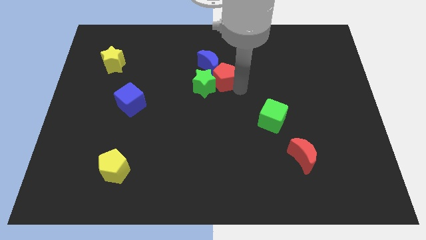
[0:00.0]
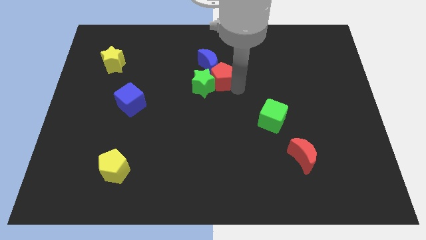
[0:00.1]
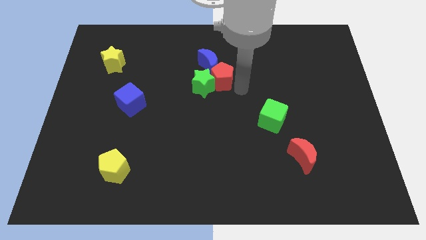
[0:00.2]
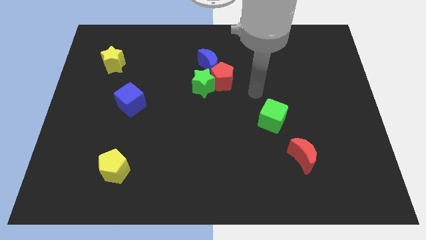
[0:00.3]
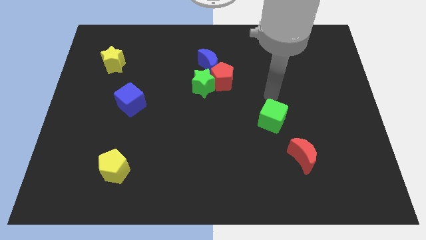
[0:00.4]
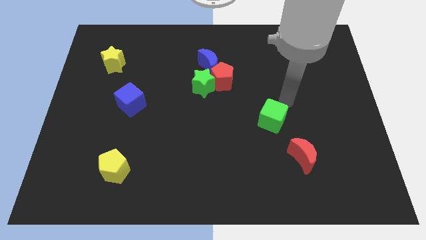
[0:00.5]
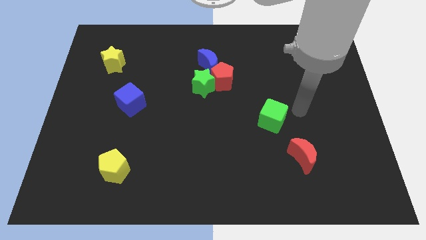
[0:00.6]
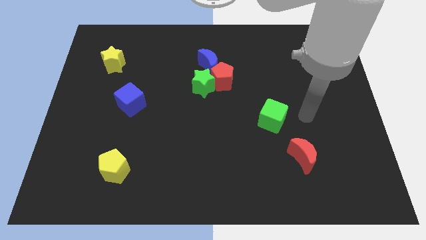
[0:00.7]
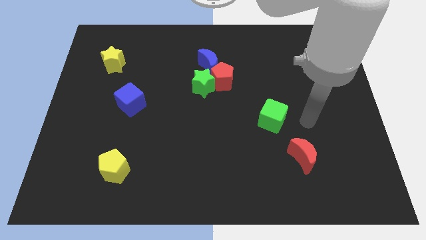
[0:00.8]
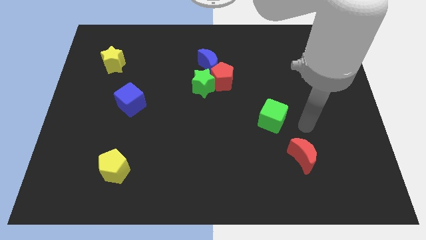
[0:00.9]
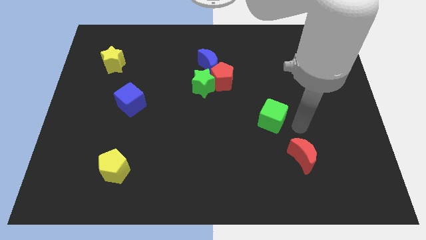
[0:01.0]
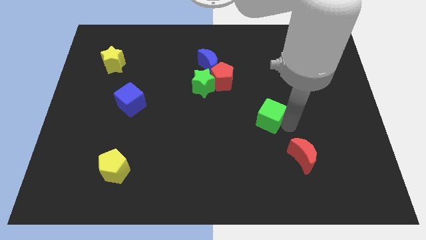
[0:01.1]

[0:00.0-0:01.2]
place your arm at the right side of the green cube

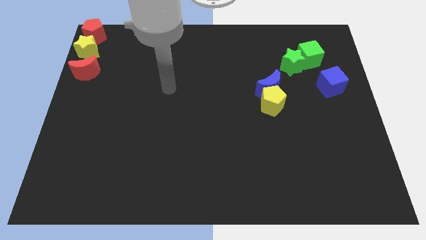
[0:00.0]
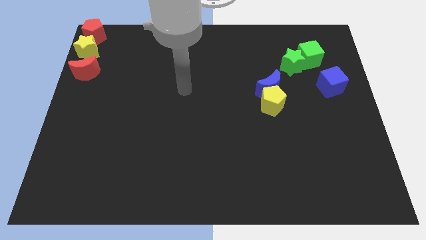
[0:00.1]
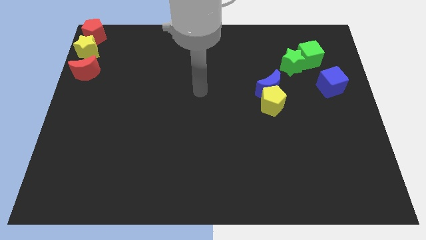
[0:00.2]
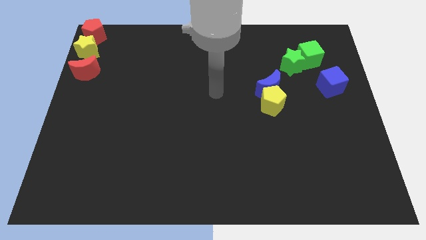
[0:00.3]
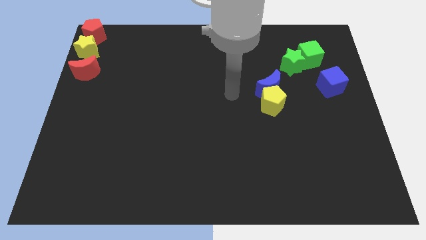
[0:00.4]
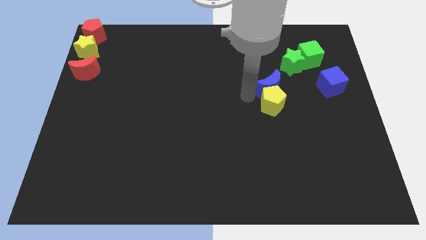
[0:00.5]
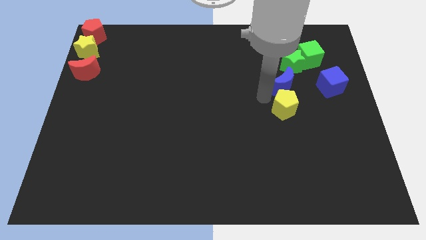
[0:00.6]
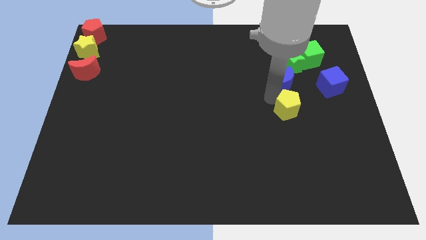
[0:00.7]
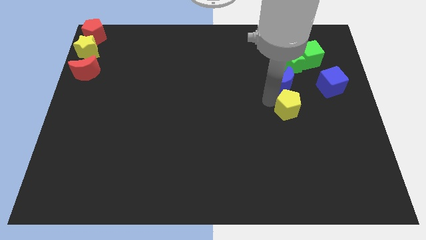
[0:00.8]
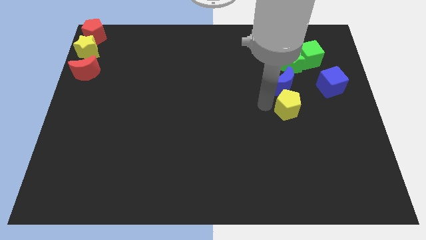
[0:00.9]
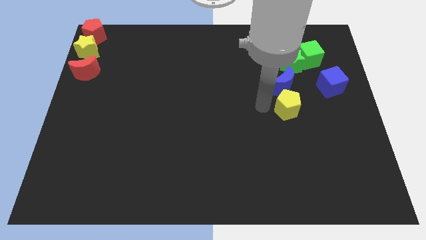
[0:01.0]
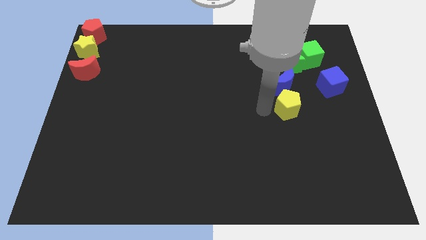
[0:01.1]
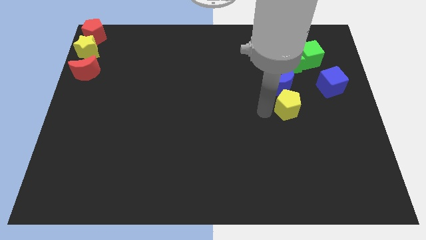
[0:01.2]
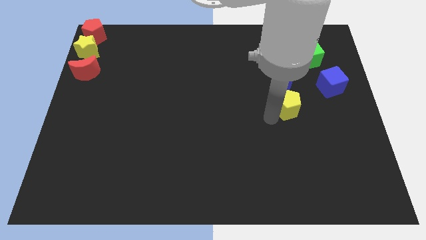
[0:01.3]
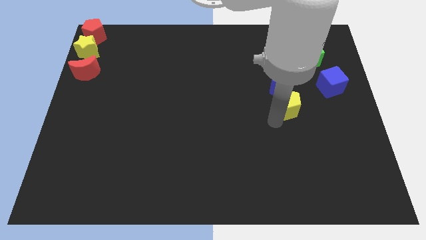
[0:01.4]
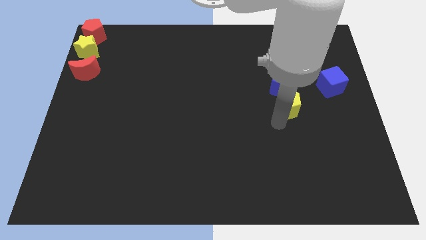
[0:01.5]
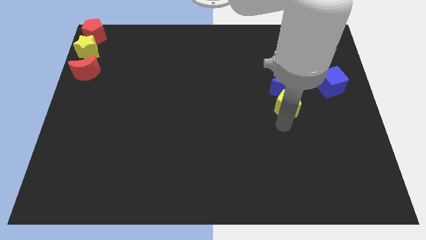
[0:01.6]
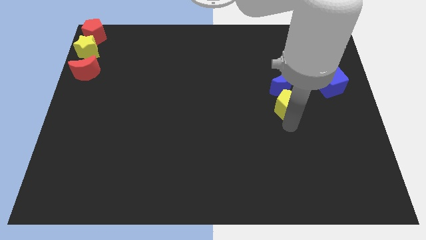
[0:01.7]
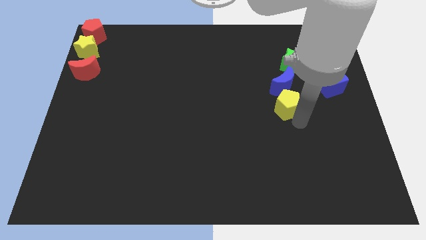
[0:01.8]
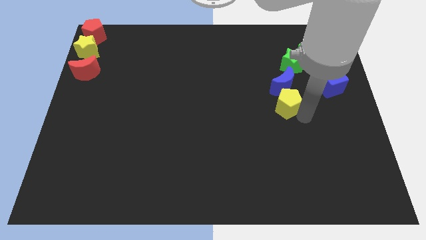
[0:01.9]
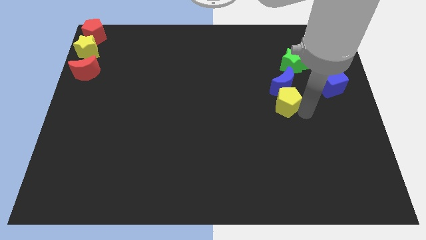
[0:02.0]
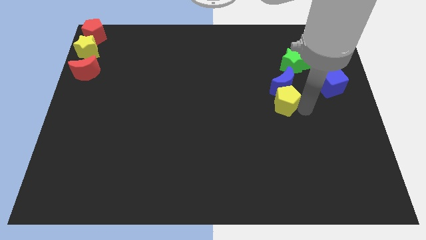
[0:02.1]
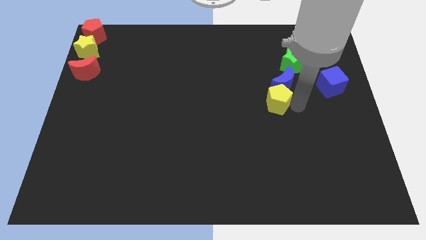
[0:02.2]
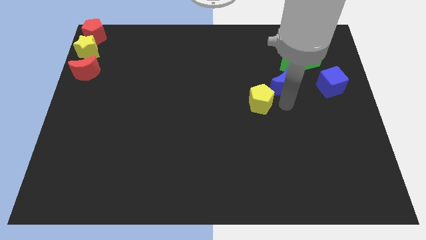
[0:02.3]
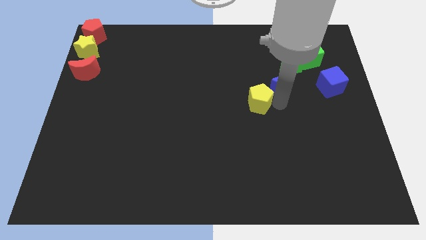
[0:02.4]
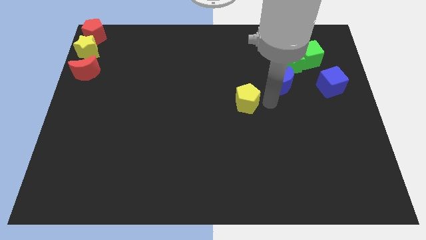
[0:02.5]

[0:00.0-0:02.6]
separate the yellow pentagon and the blue moon

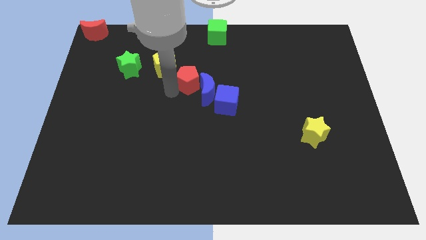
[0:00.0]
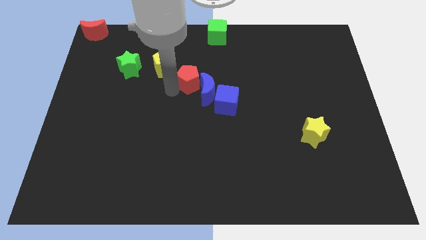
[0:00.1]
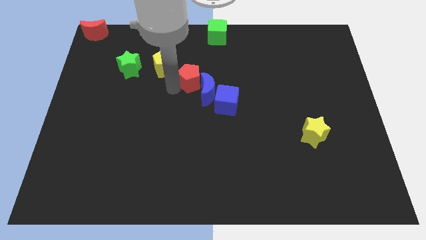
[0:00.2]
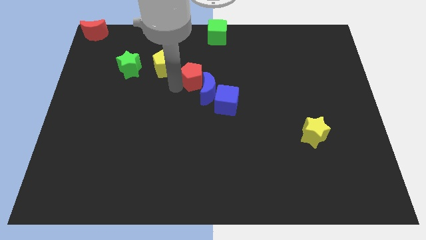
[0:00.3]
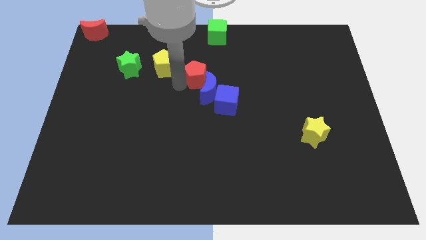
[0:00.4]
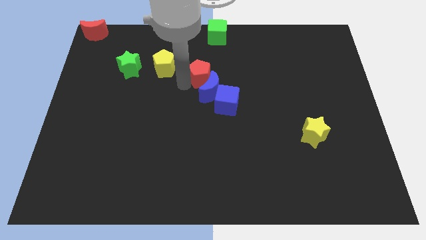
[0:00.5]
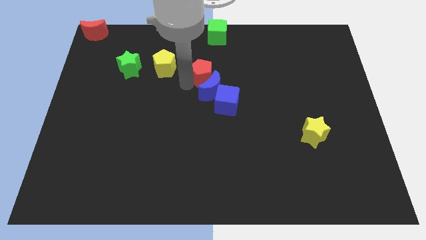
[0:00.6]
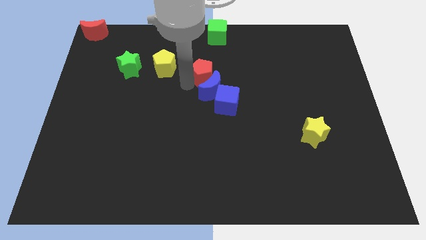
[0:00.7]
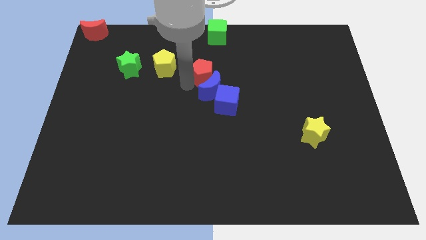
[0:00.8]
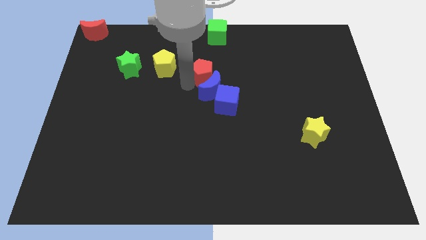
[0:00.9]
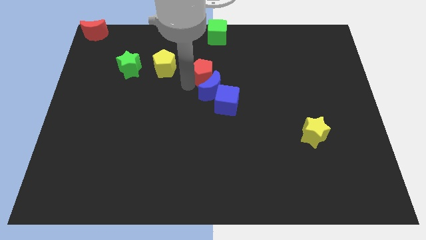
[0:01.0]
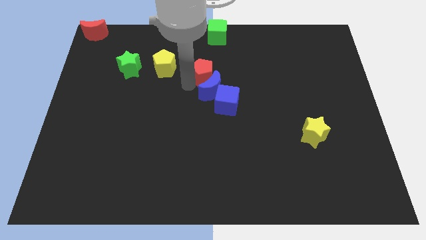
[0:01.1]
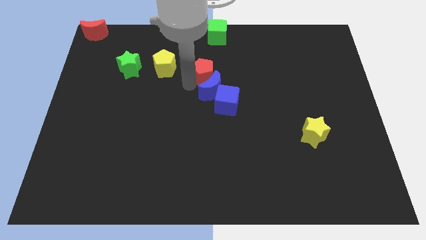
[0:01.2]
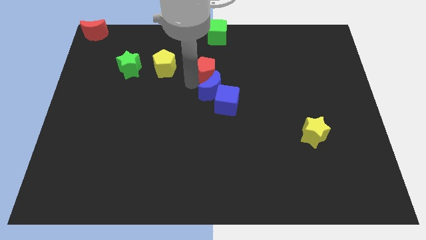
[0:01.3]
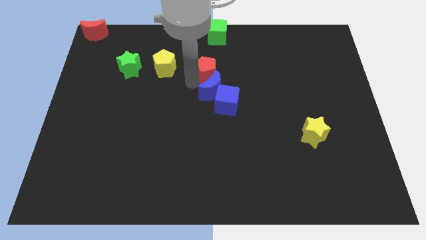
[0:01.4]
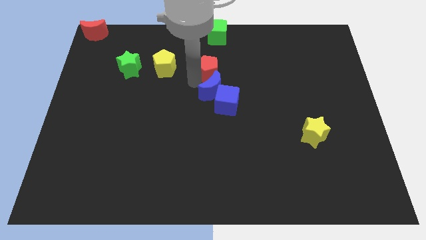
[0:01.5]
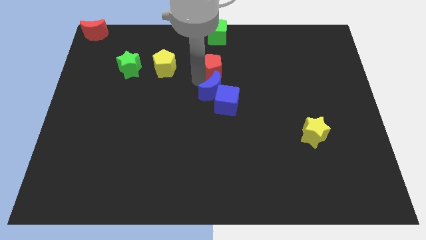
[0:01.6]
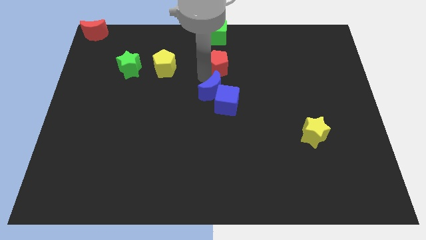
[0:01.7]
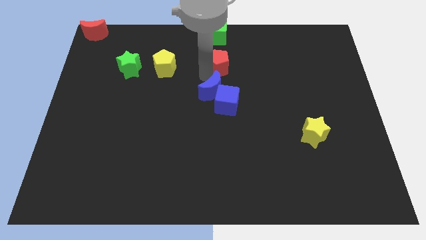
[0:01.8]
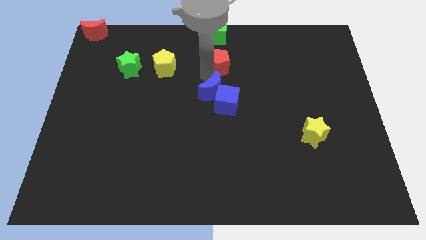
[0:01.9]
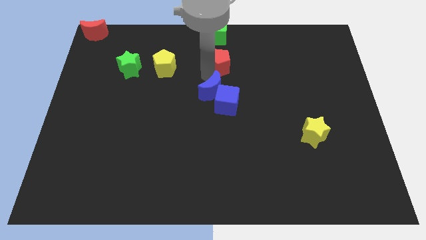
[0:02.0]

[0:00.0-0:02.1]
push red pentagon below green cube

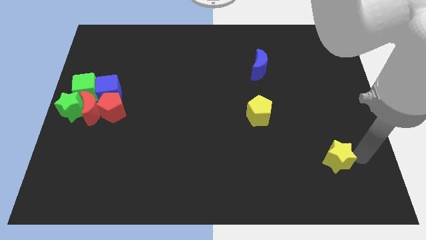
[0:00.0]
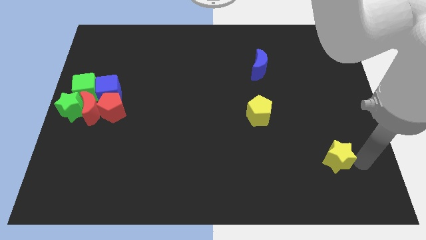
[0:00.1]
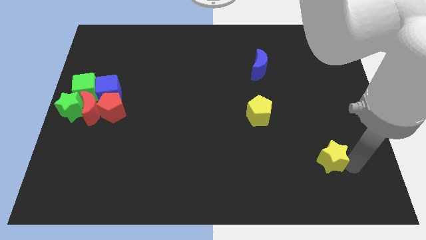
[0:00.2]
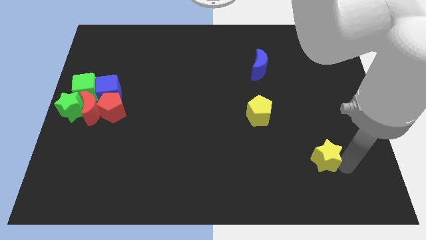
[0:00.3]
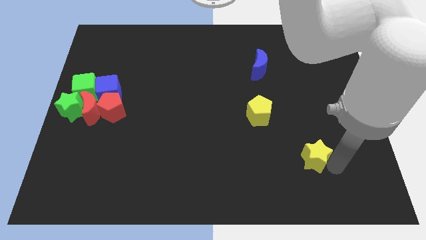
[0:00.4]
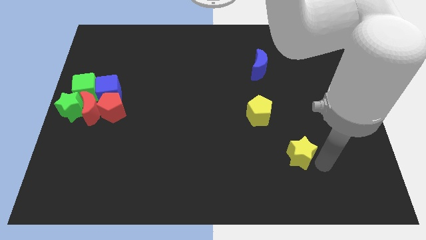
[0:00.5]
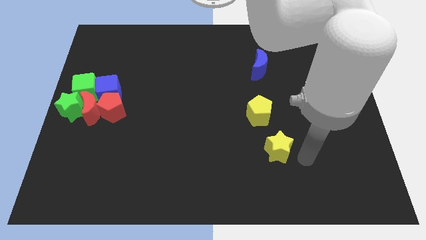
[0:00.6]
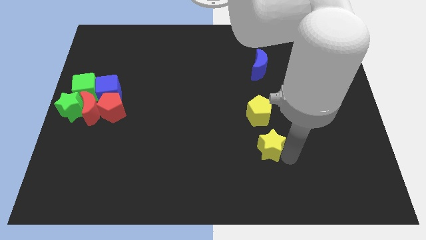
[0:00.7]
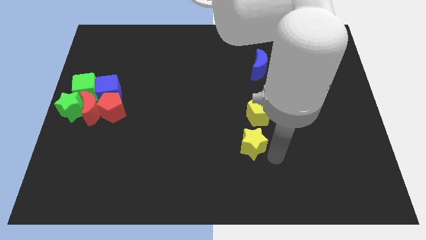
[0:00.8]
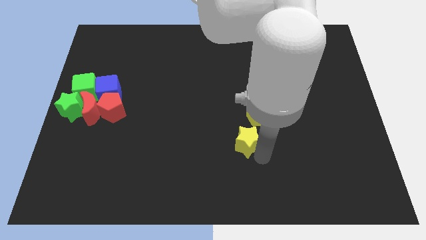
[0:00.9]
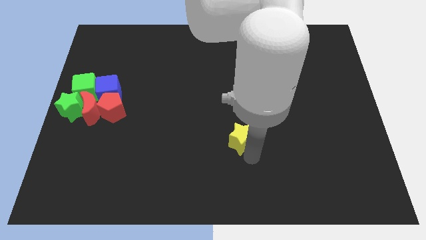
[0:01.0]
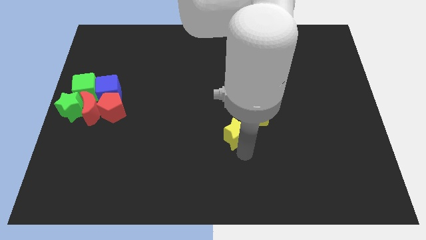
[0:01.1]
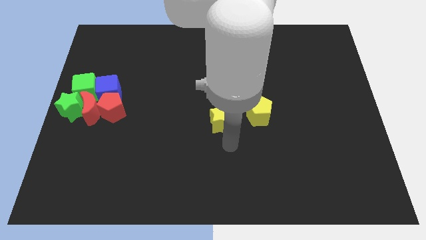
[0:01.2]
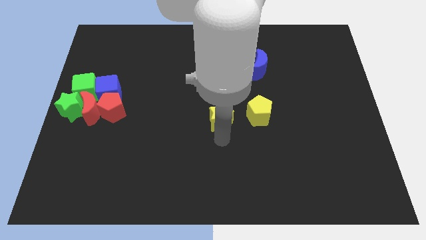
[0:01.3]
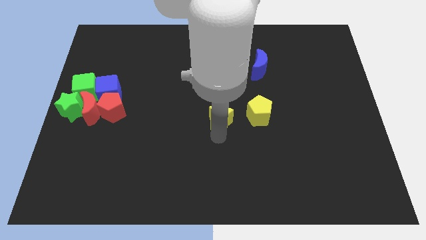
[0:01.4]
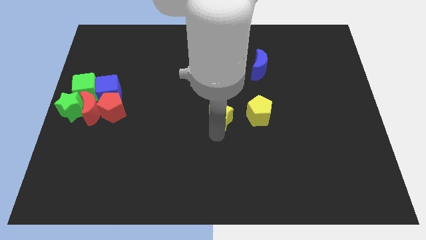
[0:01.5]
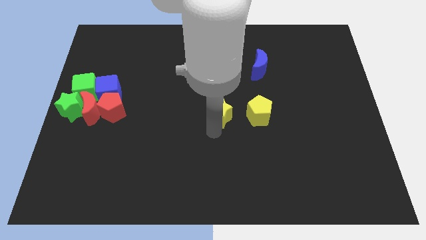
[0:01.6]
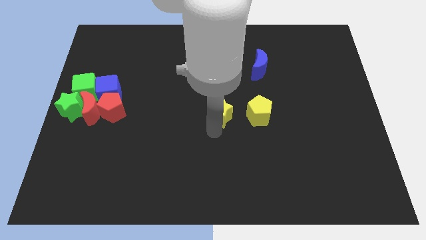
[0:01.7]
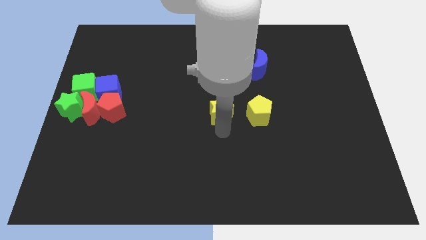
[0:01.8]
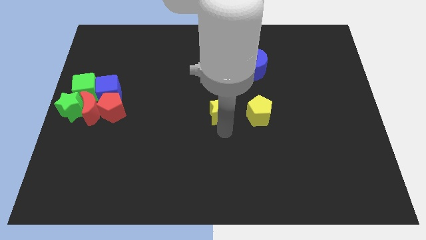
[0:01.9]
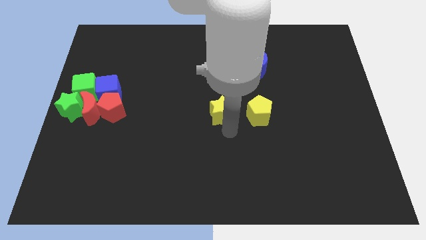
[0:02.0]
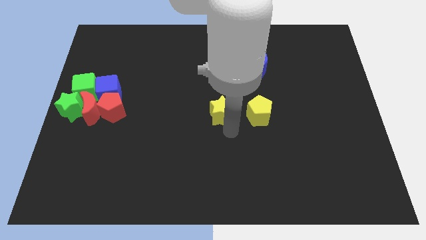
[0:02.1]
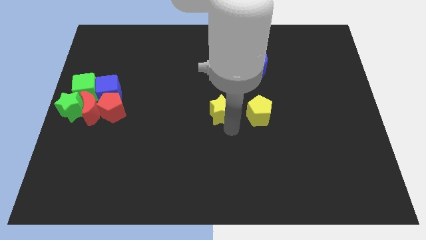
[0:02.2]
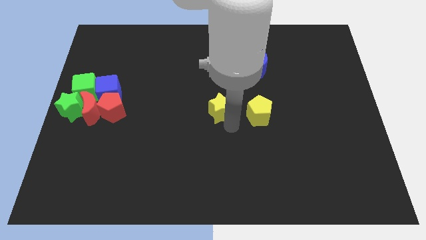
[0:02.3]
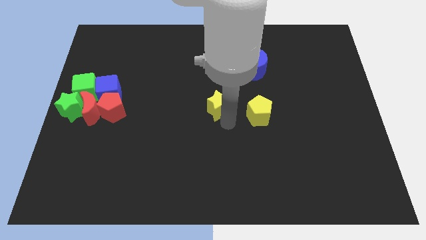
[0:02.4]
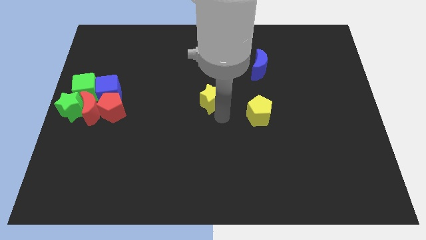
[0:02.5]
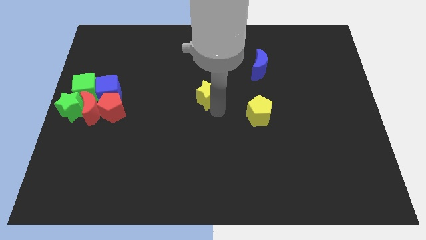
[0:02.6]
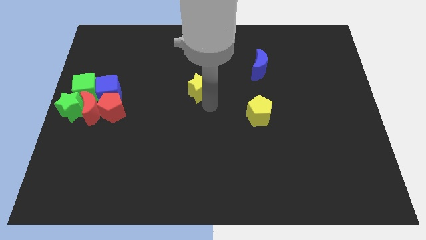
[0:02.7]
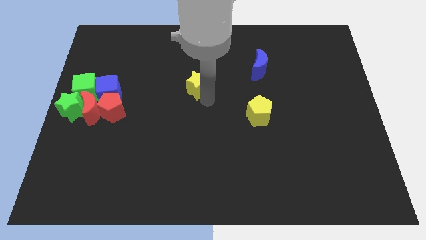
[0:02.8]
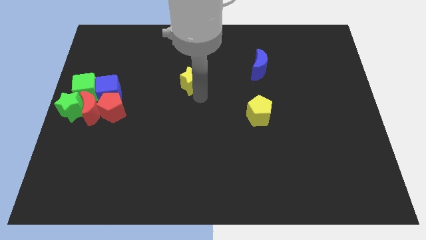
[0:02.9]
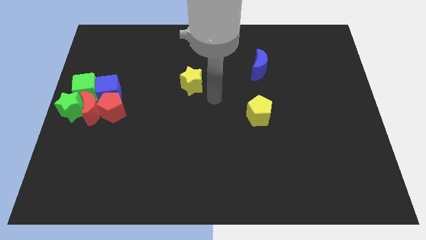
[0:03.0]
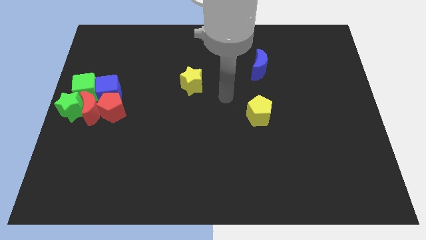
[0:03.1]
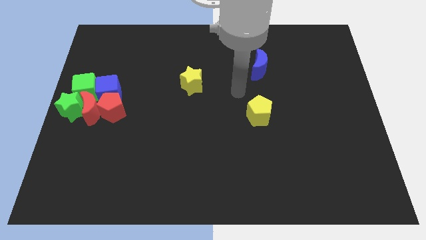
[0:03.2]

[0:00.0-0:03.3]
move the yellow star to the top left of the yellow pentagon
